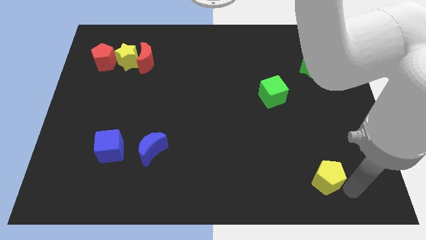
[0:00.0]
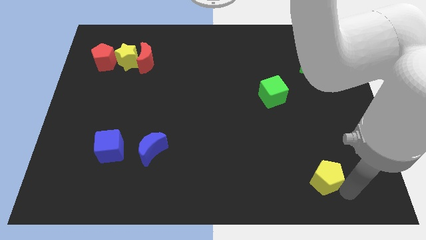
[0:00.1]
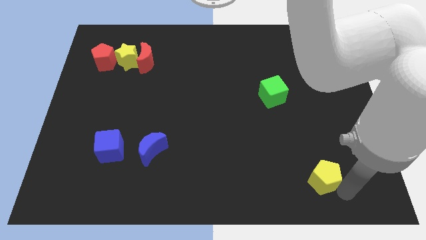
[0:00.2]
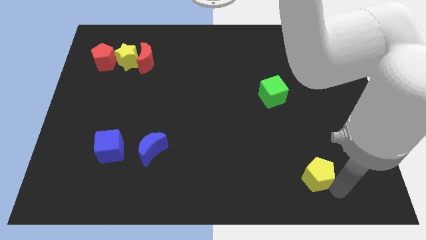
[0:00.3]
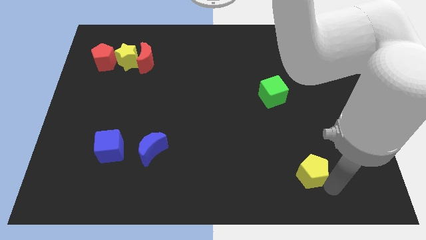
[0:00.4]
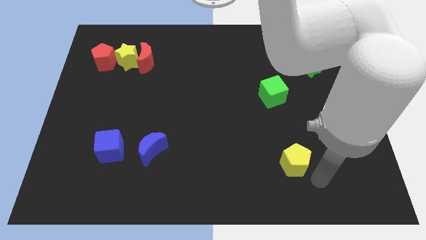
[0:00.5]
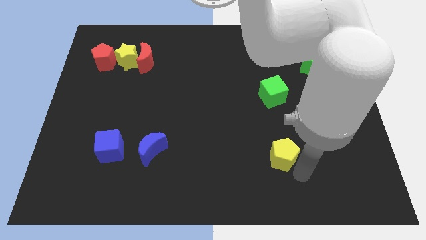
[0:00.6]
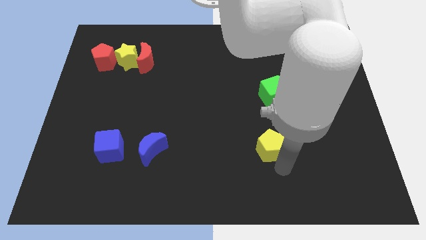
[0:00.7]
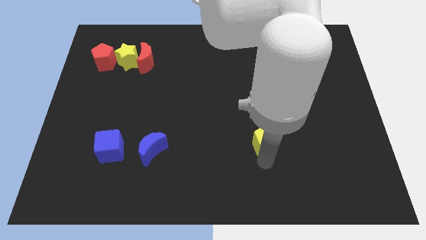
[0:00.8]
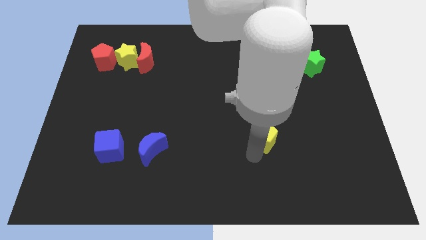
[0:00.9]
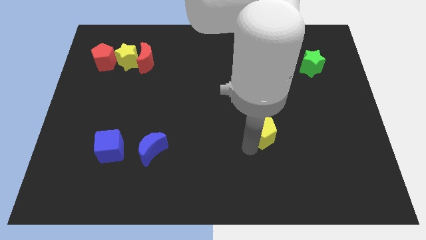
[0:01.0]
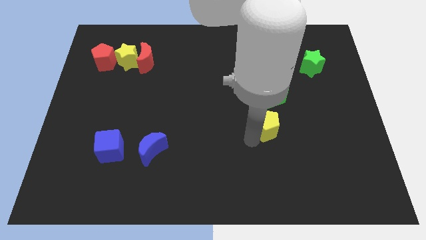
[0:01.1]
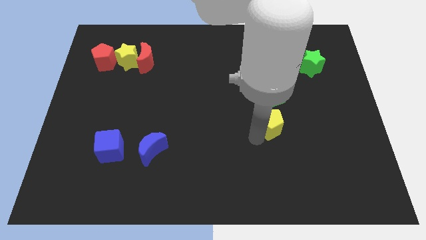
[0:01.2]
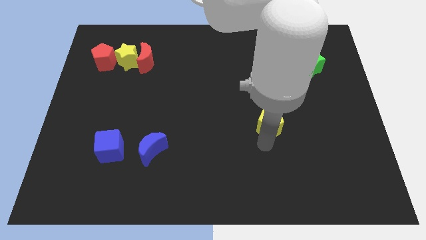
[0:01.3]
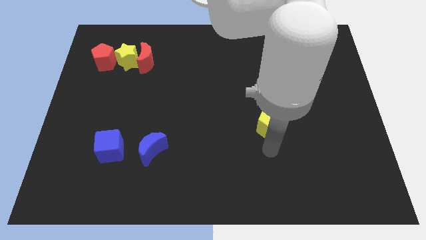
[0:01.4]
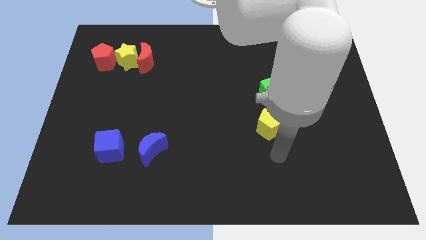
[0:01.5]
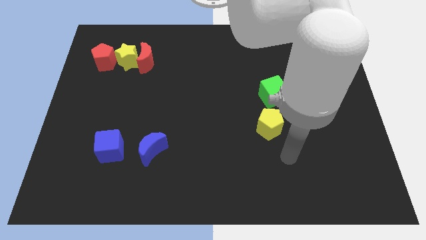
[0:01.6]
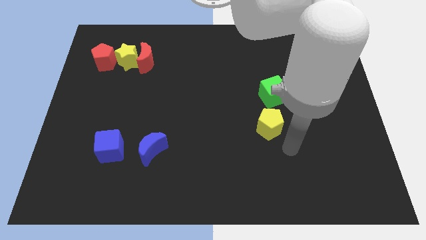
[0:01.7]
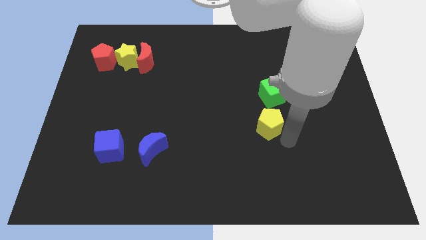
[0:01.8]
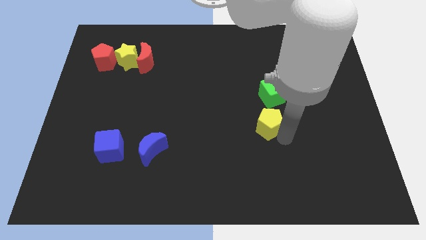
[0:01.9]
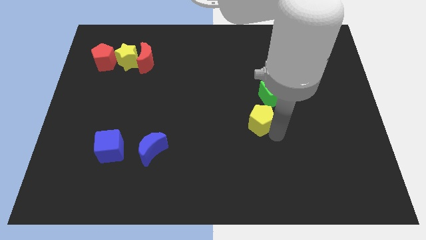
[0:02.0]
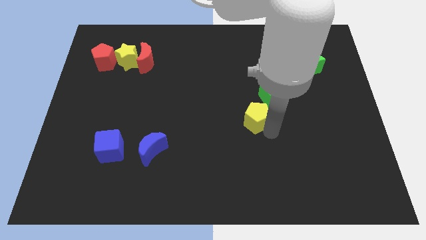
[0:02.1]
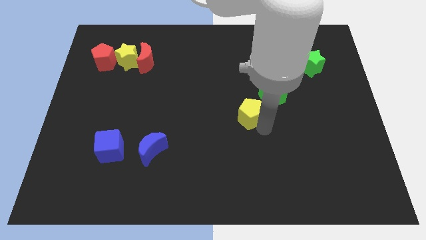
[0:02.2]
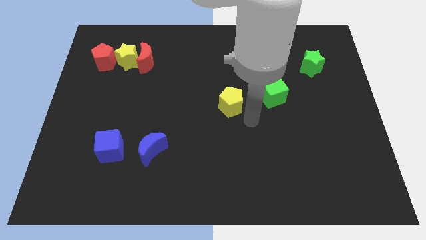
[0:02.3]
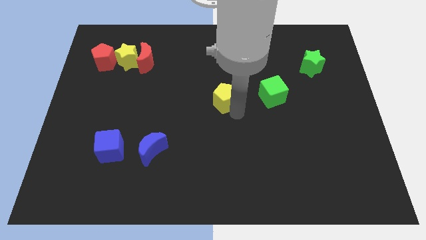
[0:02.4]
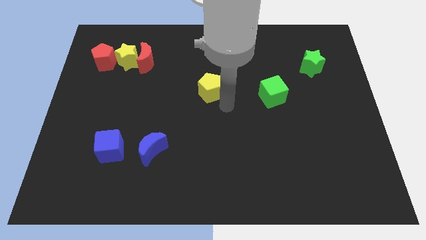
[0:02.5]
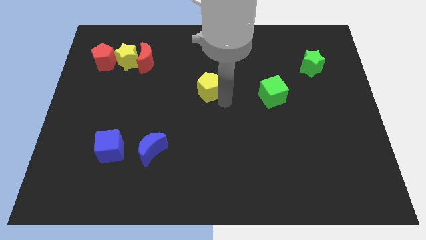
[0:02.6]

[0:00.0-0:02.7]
move the yellow pentagon to the center of the board

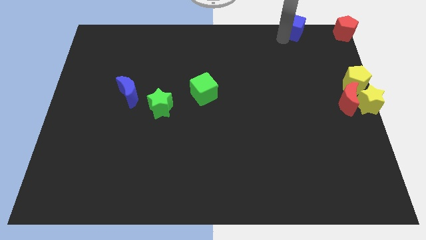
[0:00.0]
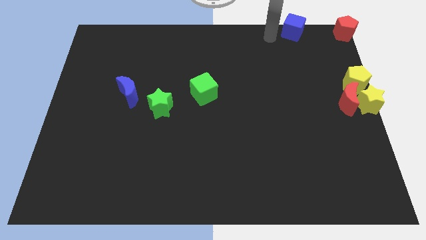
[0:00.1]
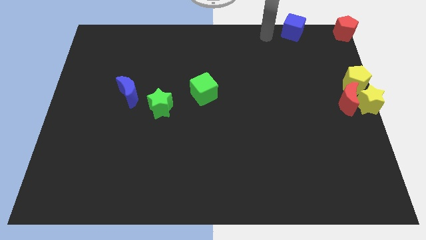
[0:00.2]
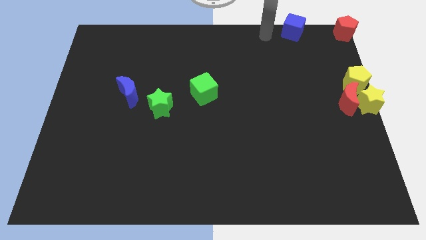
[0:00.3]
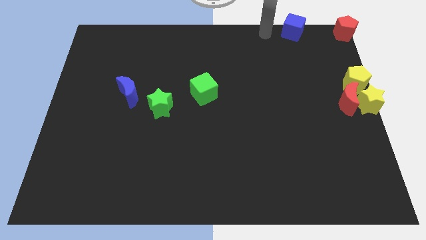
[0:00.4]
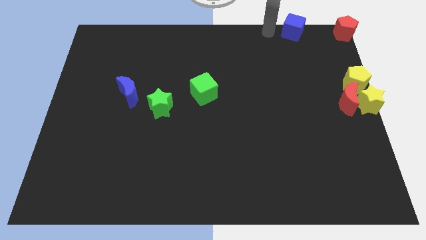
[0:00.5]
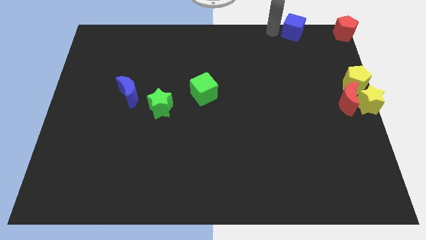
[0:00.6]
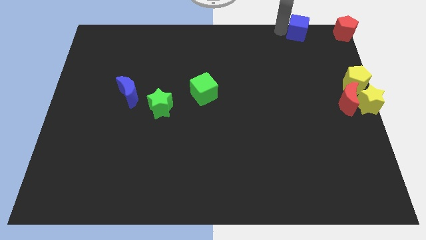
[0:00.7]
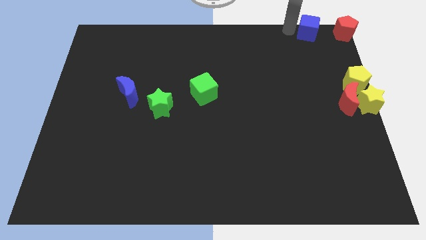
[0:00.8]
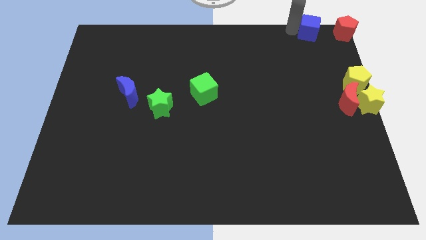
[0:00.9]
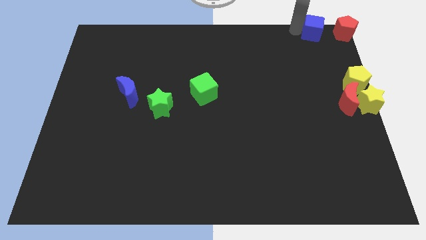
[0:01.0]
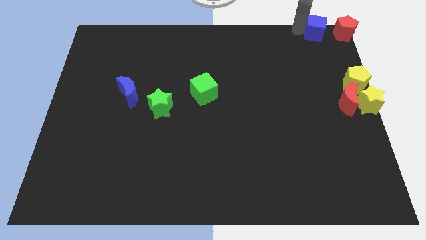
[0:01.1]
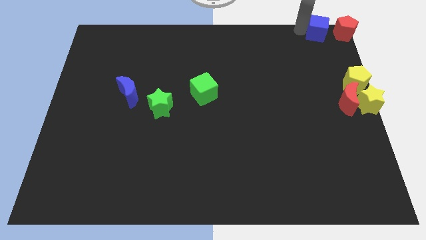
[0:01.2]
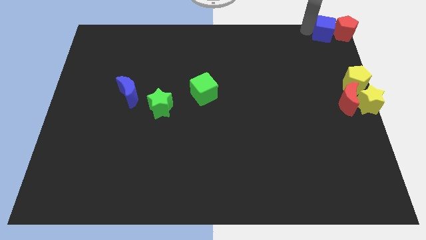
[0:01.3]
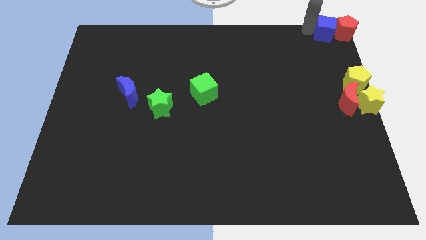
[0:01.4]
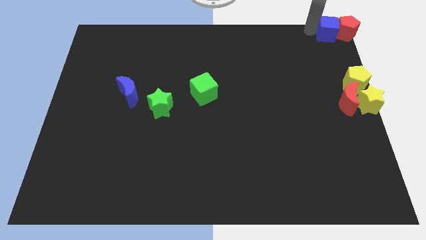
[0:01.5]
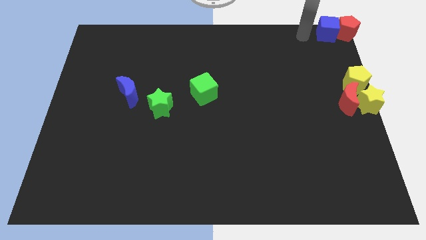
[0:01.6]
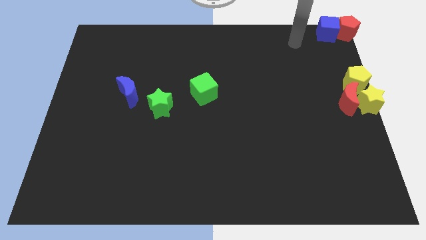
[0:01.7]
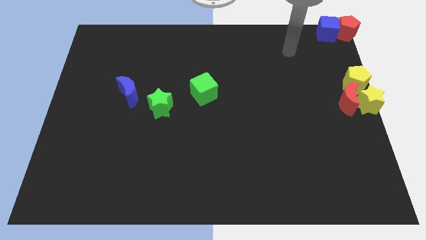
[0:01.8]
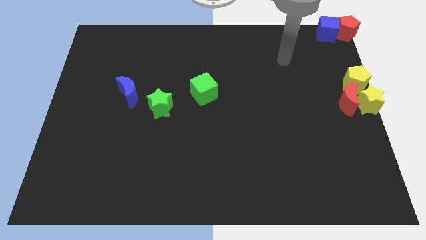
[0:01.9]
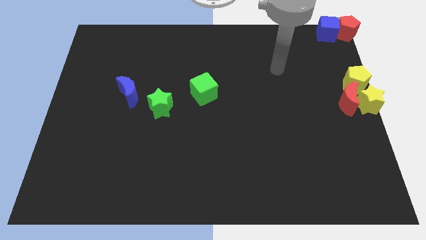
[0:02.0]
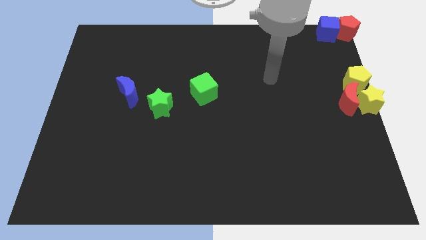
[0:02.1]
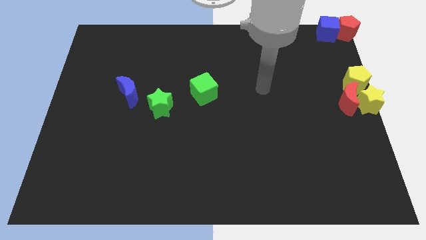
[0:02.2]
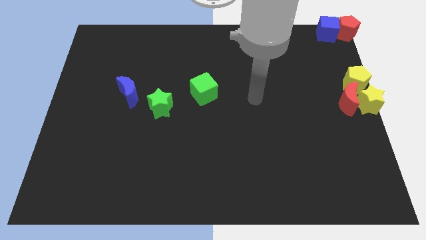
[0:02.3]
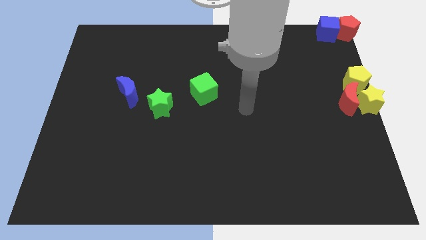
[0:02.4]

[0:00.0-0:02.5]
move the blue cube to the left side of the red pentagon

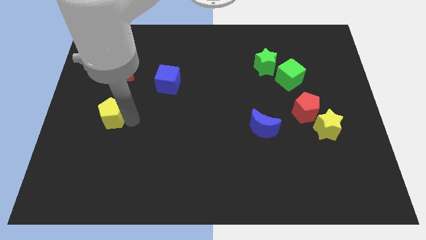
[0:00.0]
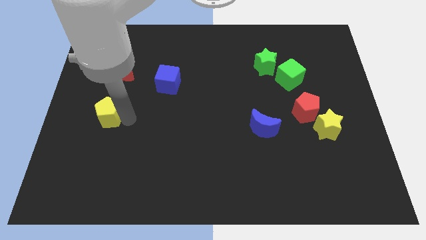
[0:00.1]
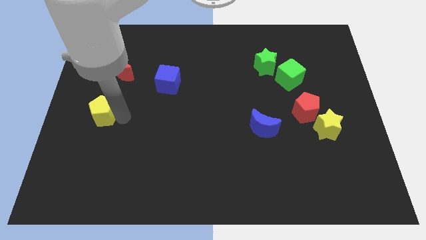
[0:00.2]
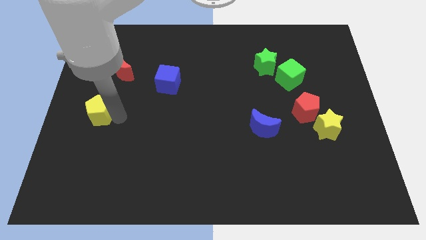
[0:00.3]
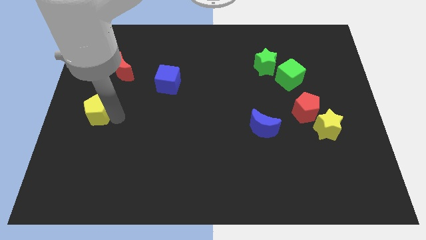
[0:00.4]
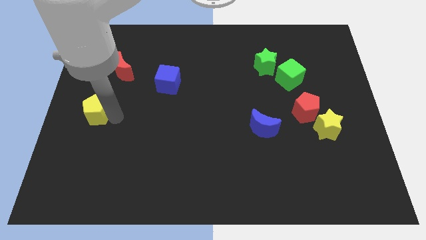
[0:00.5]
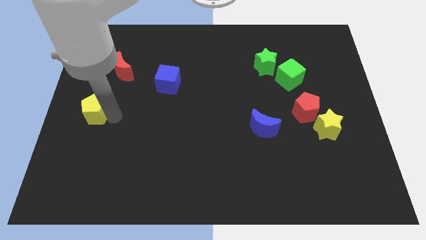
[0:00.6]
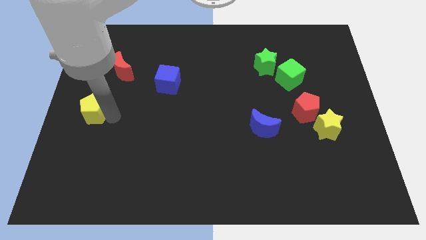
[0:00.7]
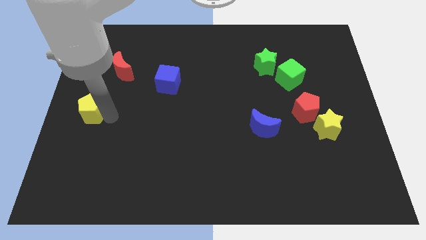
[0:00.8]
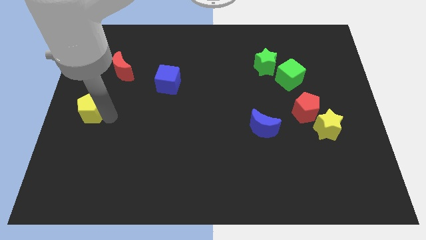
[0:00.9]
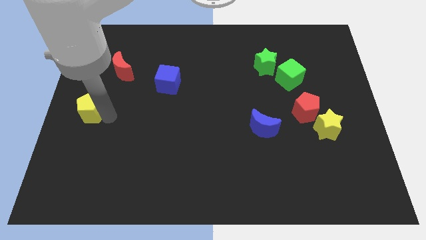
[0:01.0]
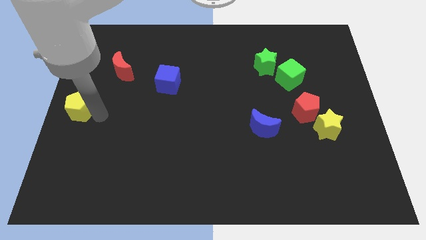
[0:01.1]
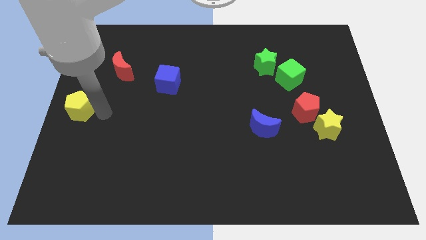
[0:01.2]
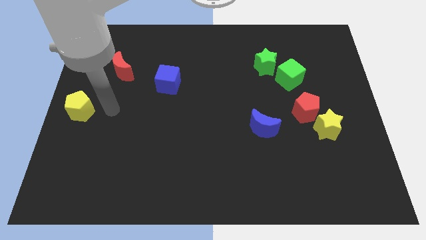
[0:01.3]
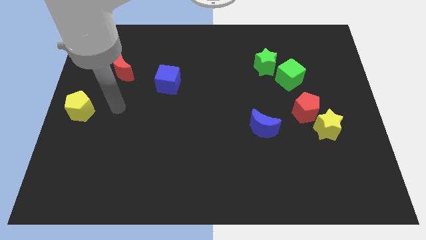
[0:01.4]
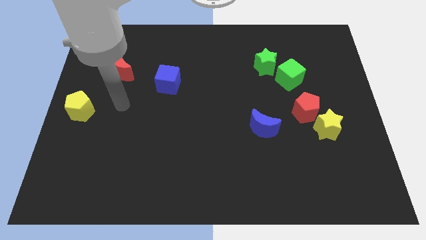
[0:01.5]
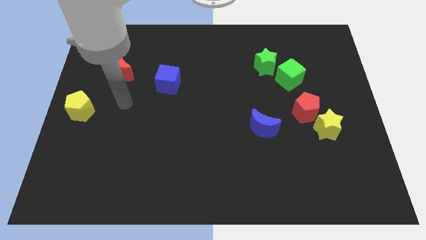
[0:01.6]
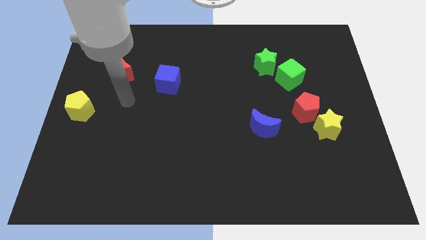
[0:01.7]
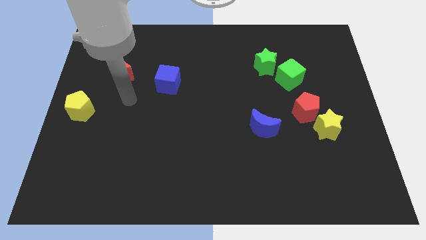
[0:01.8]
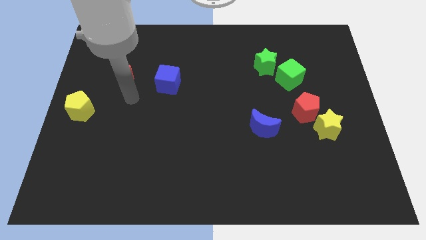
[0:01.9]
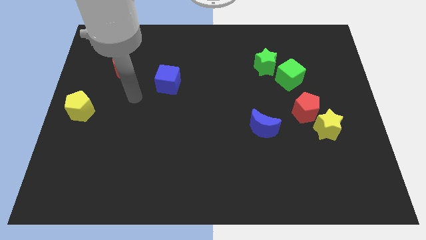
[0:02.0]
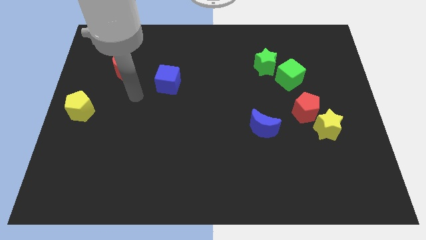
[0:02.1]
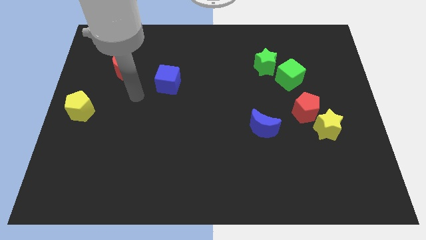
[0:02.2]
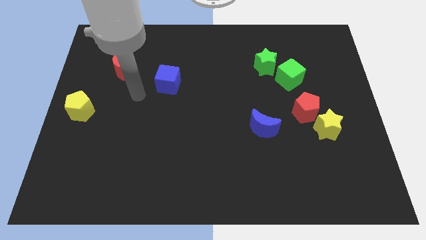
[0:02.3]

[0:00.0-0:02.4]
move the yellow pentagon to the left center of the board

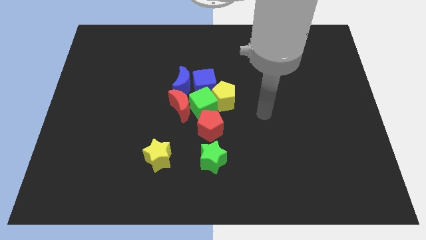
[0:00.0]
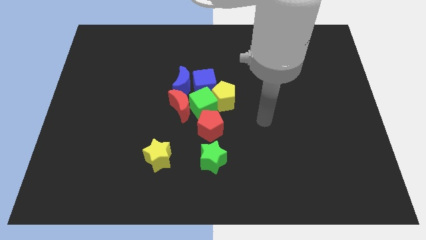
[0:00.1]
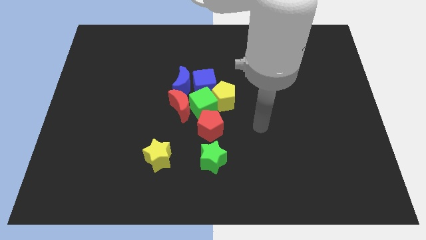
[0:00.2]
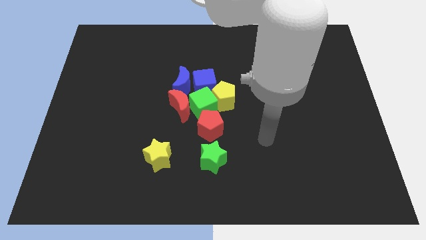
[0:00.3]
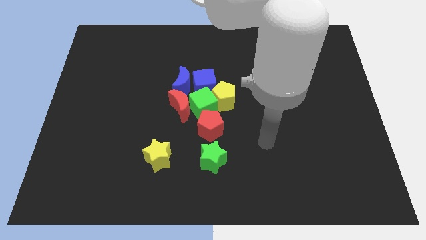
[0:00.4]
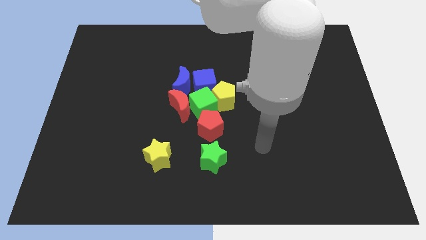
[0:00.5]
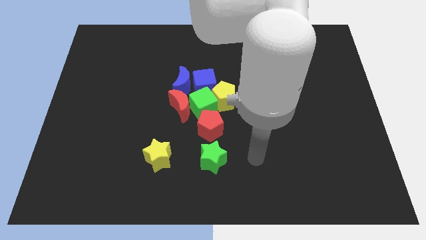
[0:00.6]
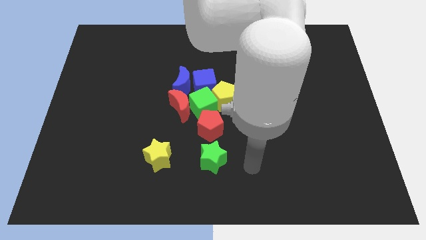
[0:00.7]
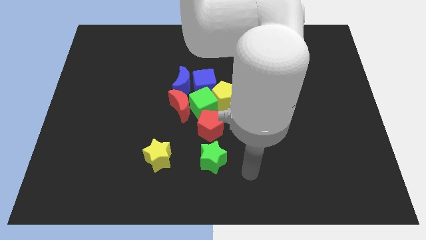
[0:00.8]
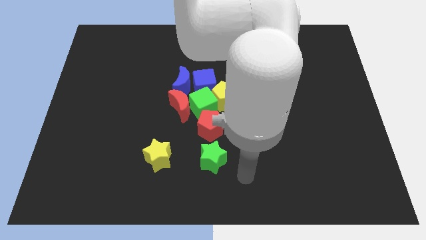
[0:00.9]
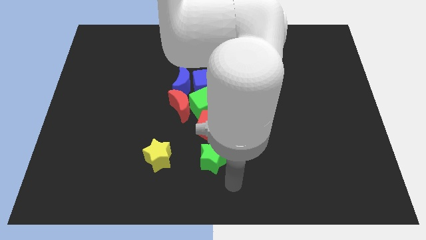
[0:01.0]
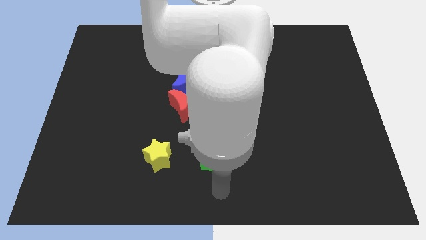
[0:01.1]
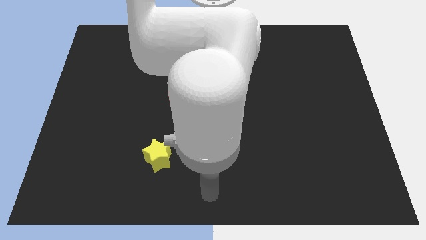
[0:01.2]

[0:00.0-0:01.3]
put your hand vertically below the green star

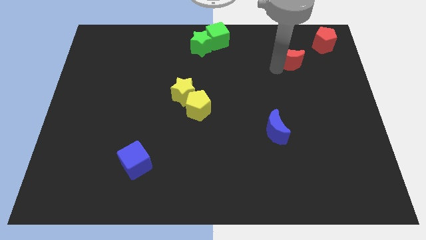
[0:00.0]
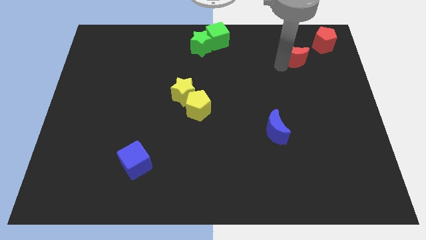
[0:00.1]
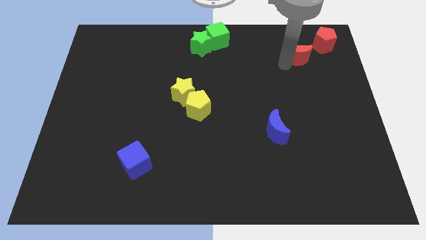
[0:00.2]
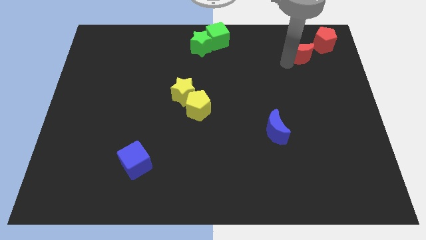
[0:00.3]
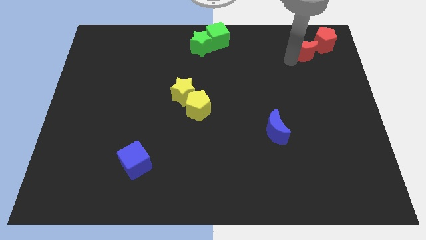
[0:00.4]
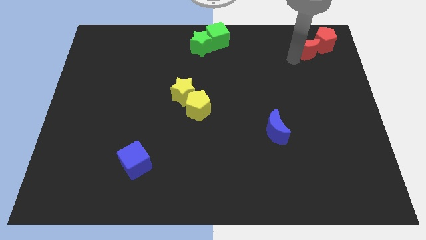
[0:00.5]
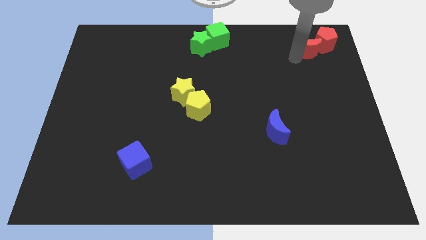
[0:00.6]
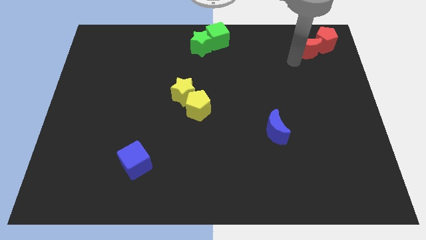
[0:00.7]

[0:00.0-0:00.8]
place red crescent below the red pentagon
